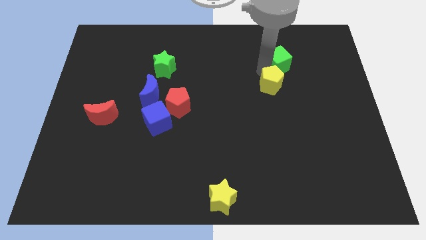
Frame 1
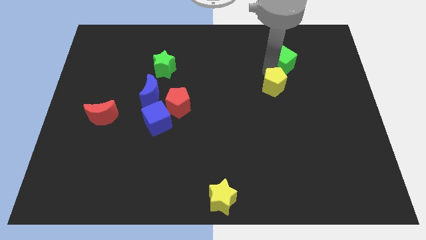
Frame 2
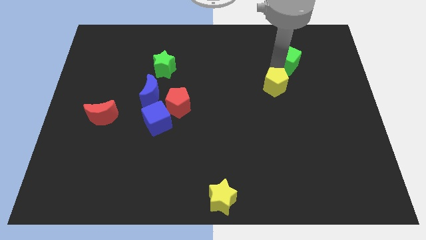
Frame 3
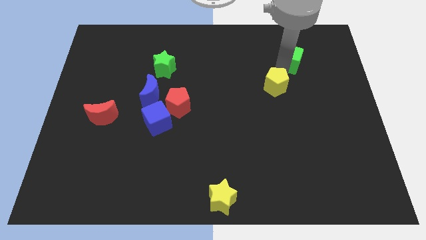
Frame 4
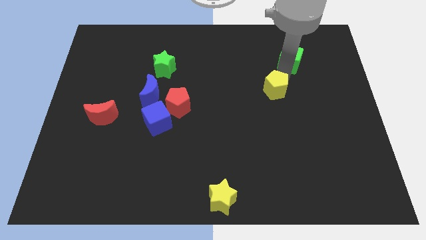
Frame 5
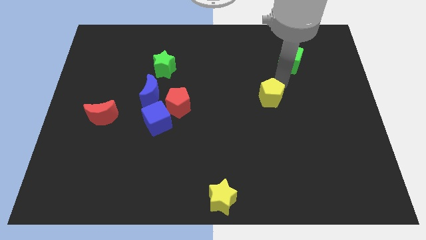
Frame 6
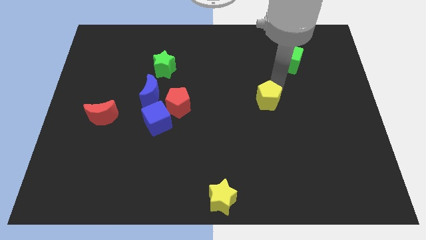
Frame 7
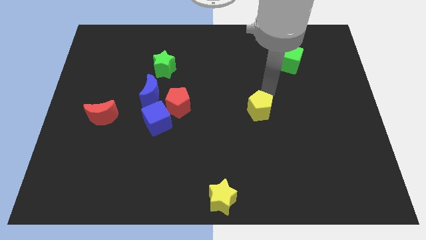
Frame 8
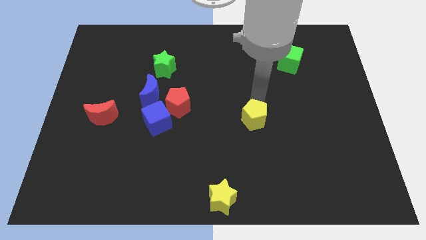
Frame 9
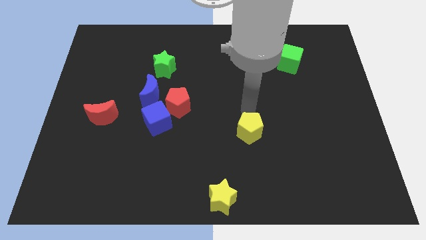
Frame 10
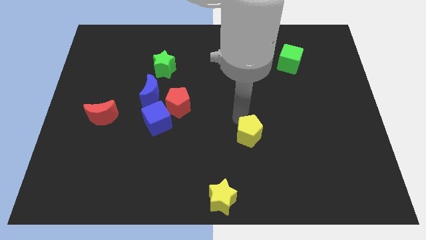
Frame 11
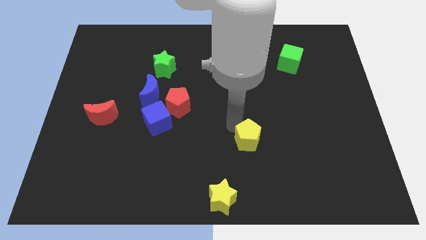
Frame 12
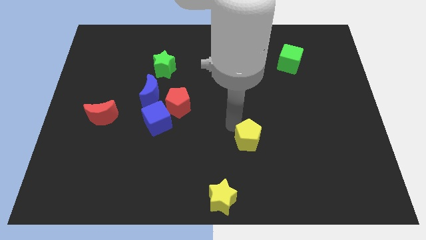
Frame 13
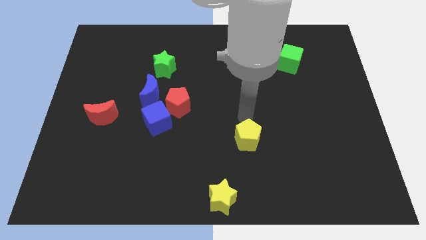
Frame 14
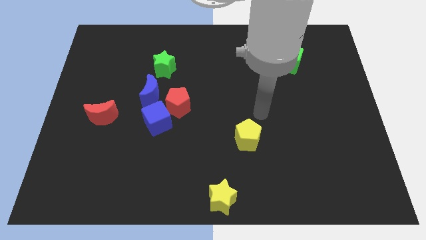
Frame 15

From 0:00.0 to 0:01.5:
separate the yellow pentagon from the green cube

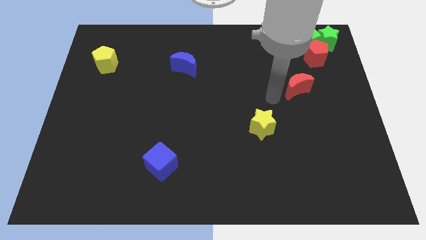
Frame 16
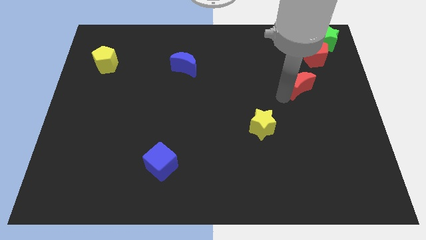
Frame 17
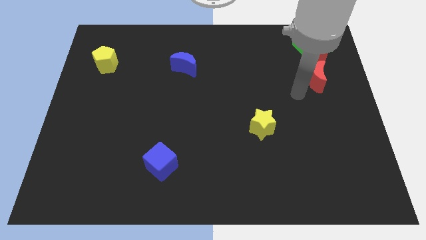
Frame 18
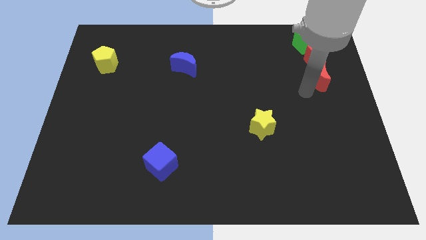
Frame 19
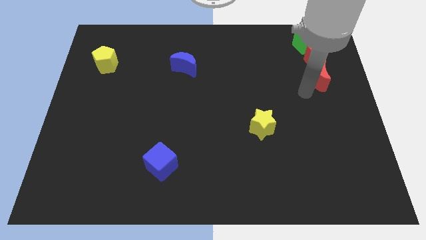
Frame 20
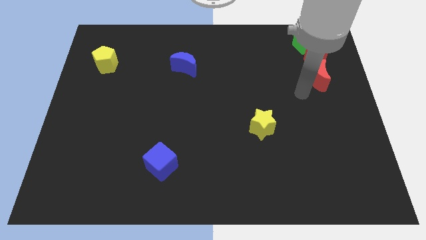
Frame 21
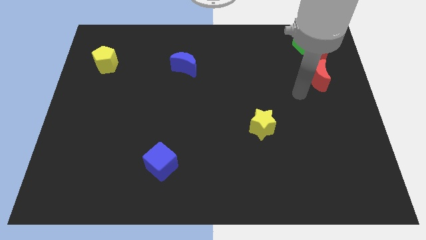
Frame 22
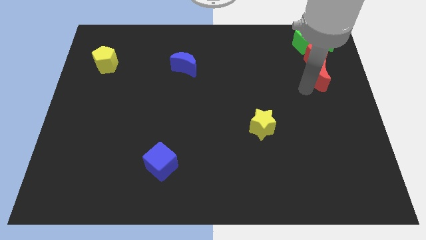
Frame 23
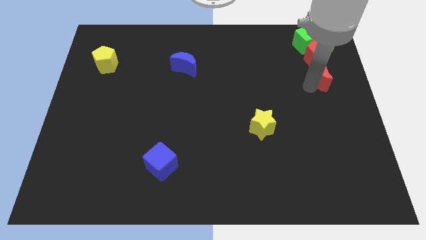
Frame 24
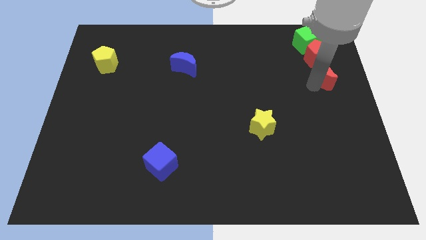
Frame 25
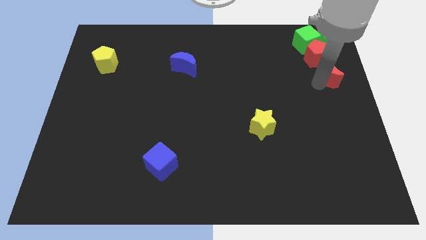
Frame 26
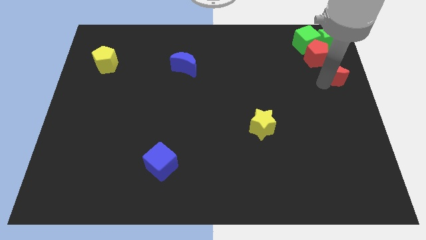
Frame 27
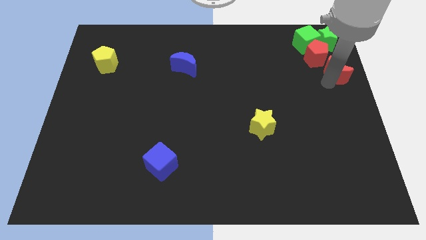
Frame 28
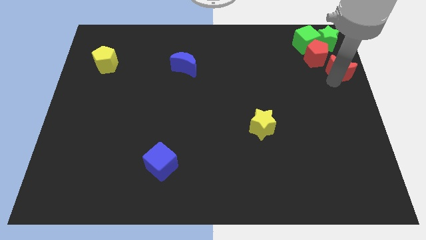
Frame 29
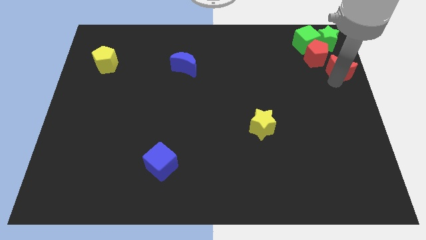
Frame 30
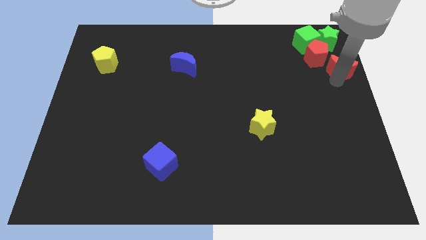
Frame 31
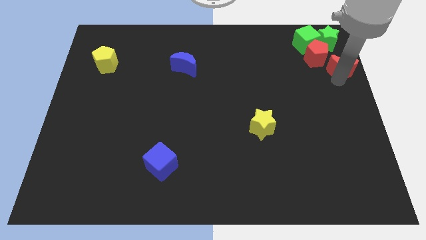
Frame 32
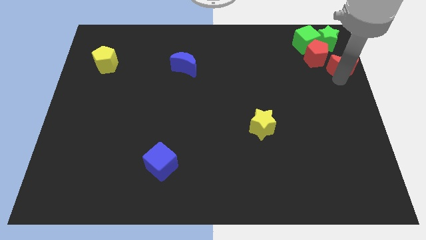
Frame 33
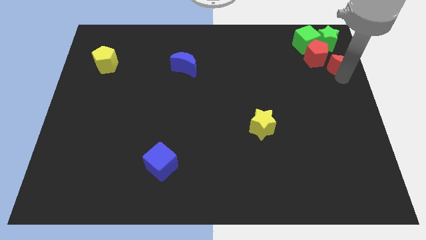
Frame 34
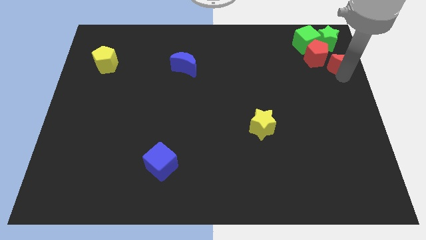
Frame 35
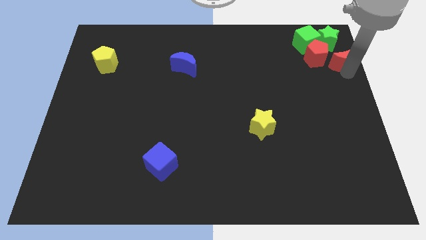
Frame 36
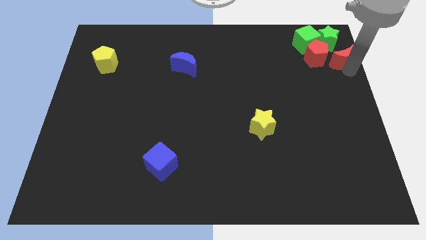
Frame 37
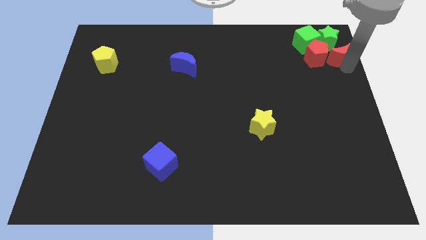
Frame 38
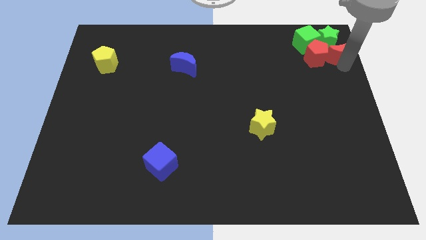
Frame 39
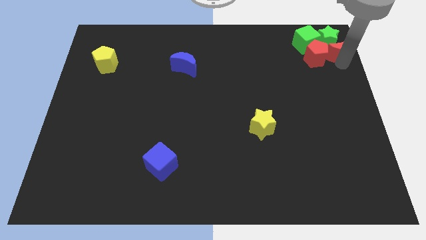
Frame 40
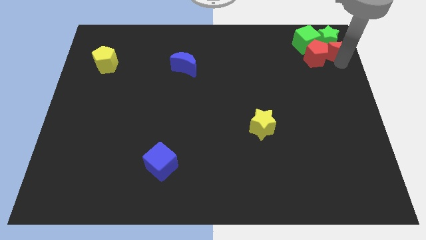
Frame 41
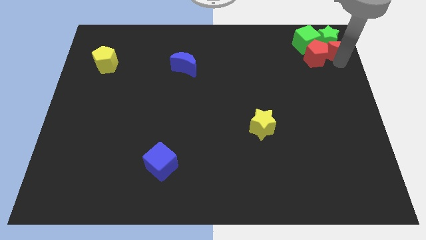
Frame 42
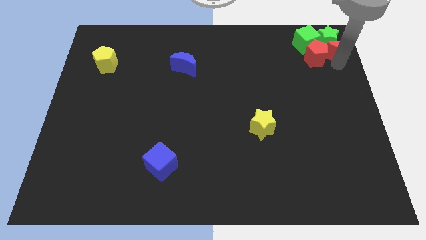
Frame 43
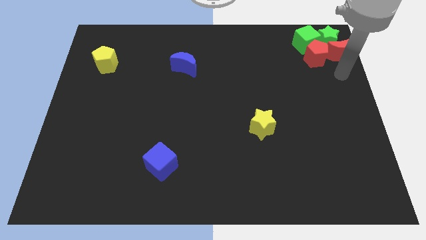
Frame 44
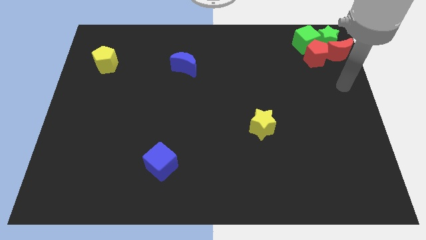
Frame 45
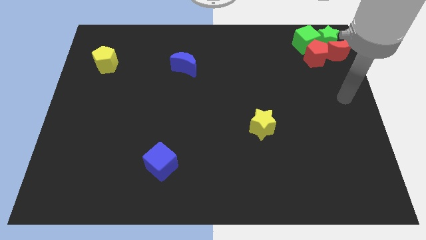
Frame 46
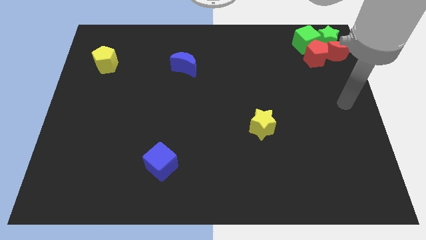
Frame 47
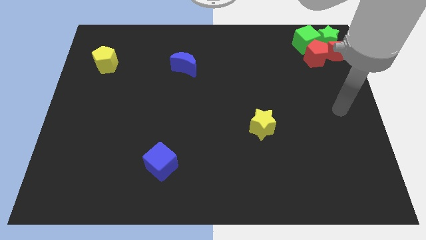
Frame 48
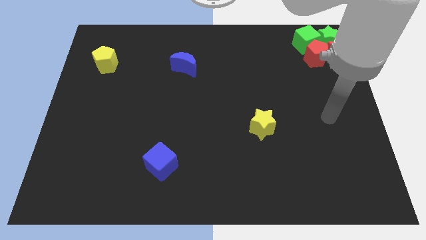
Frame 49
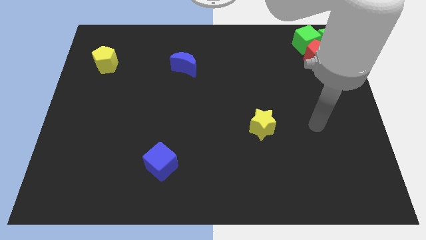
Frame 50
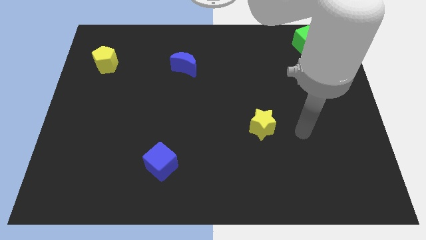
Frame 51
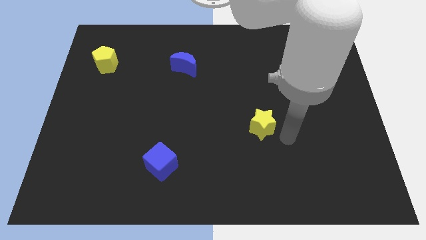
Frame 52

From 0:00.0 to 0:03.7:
move the red moon to the right of red pentagon

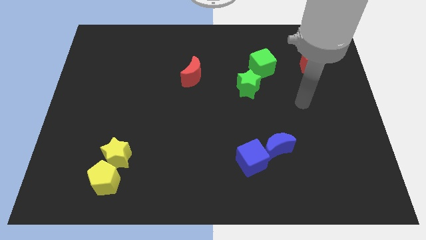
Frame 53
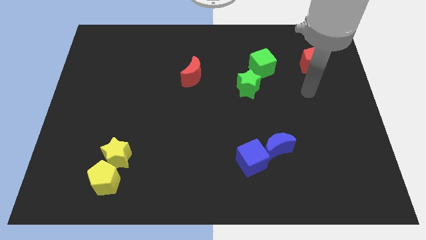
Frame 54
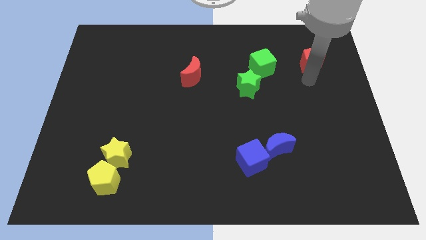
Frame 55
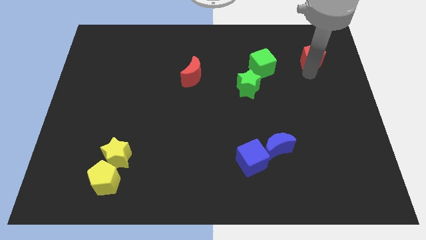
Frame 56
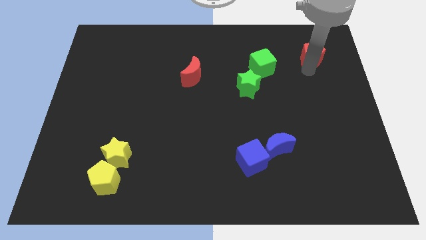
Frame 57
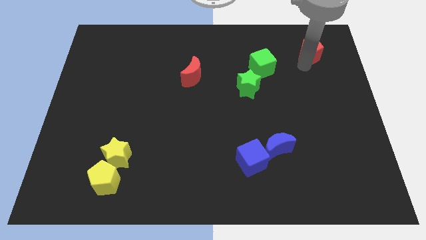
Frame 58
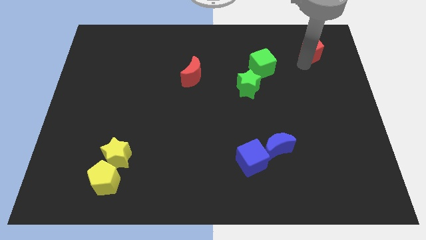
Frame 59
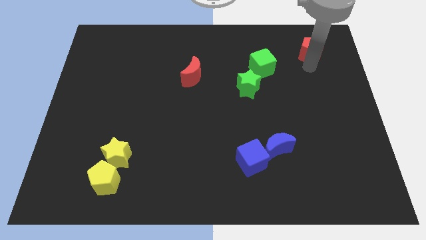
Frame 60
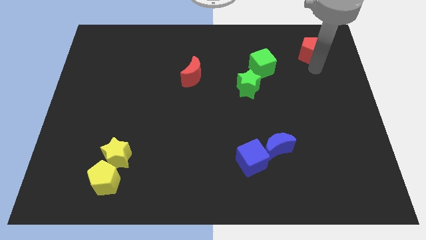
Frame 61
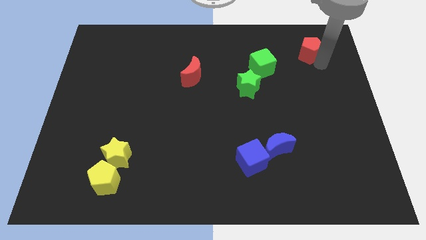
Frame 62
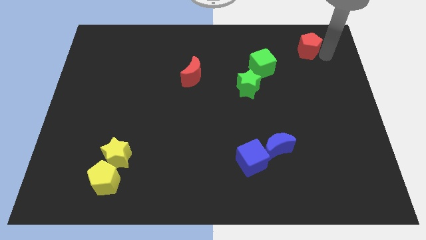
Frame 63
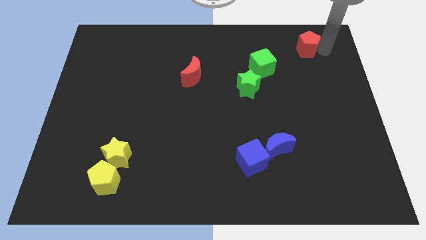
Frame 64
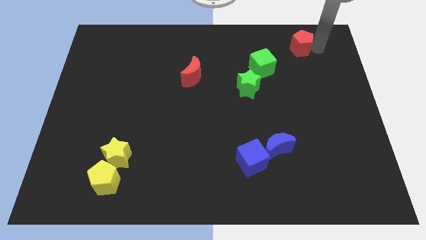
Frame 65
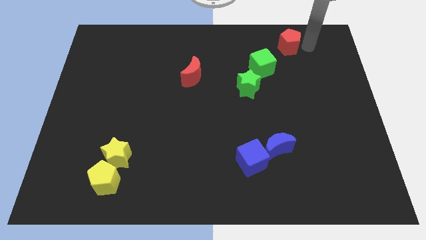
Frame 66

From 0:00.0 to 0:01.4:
push the red pentagon slightly upwards

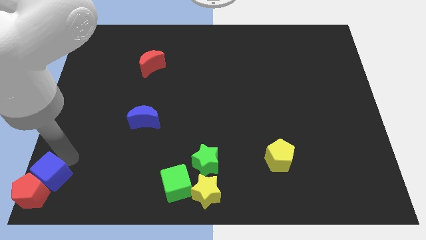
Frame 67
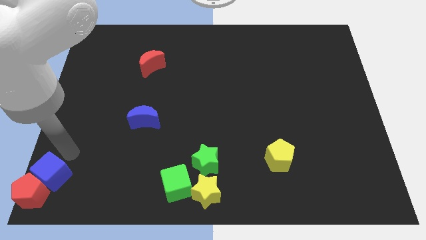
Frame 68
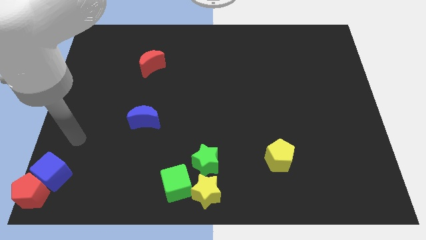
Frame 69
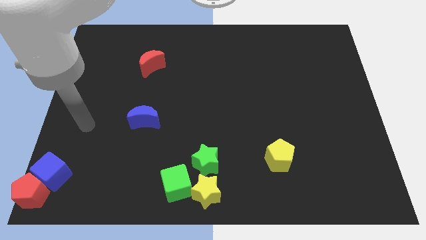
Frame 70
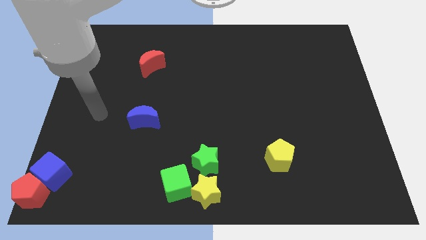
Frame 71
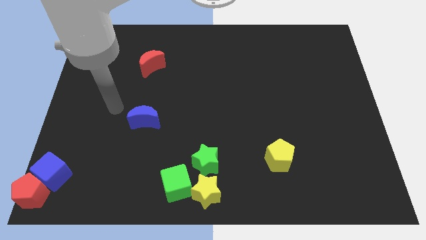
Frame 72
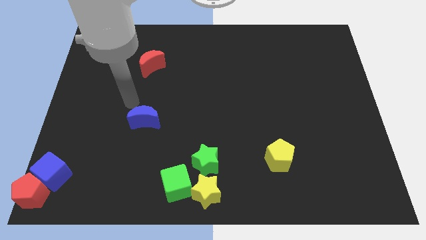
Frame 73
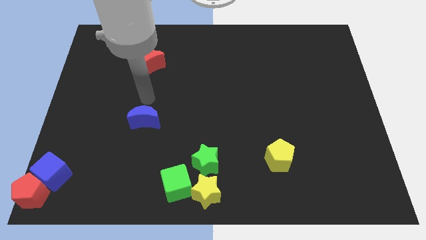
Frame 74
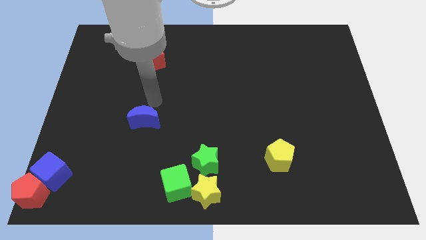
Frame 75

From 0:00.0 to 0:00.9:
move arm near blue

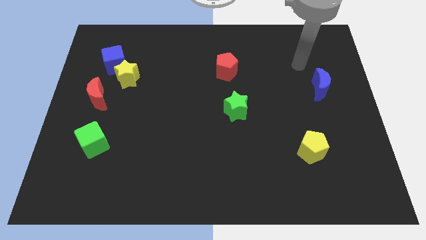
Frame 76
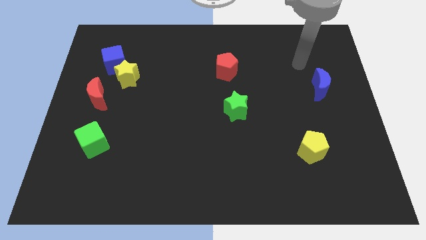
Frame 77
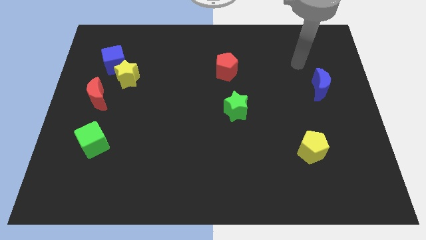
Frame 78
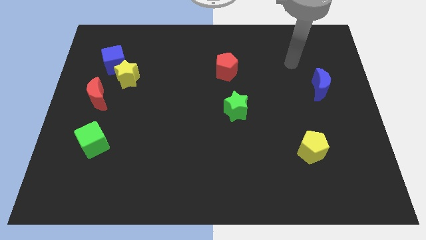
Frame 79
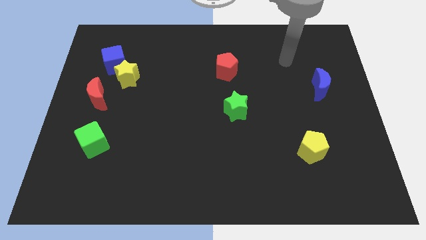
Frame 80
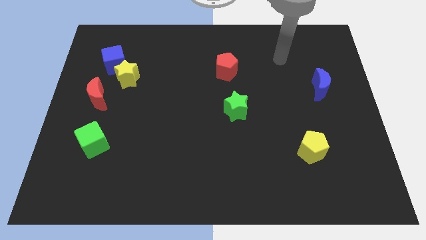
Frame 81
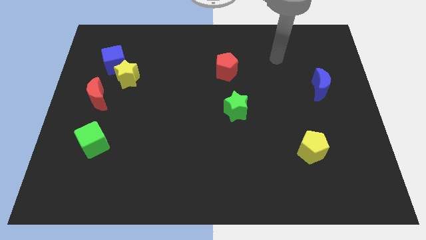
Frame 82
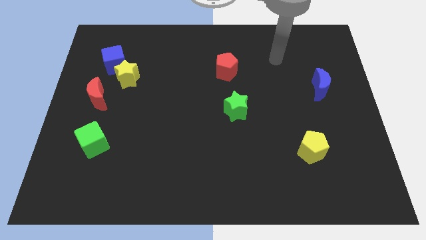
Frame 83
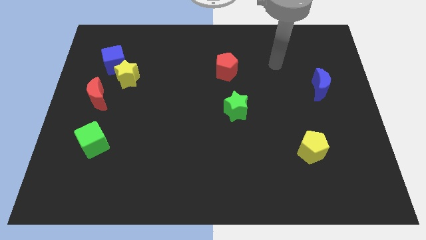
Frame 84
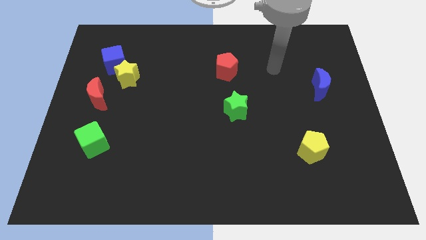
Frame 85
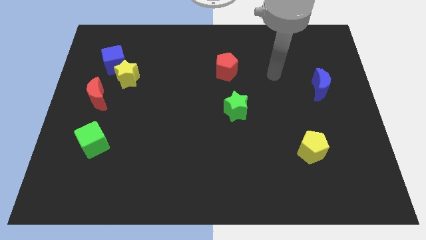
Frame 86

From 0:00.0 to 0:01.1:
place your arm in between the red pentagon and blue moon

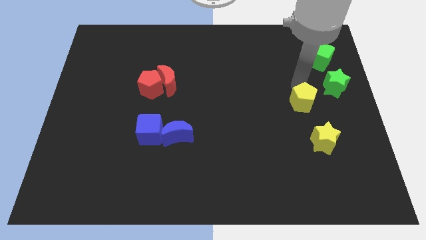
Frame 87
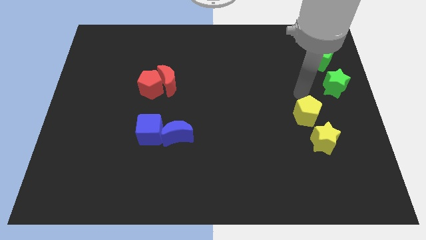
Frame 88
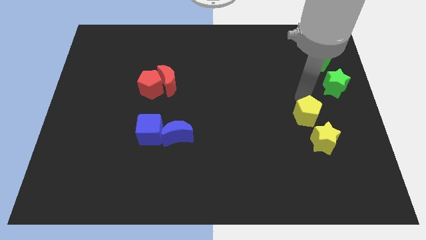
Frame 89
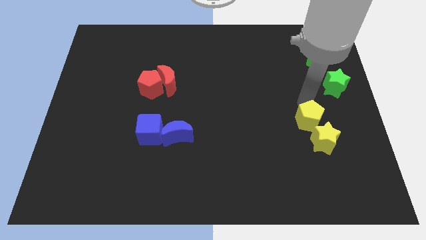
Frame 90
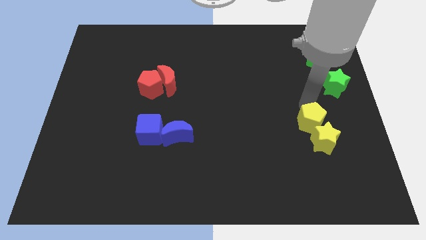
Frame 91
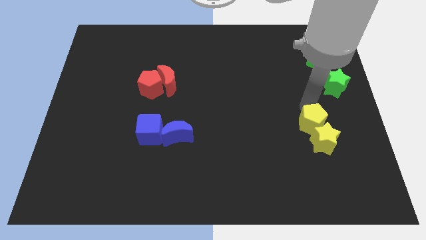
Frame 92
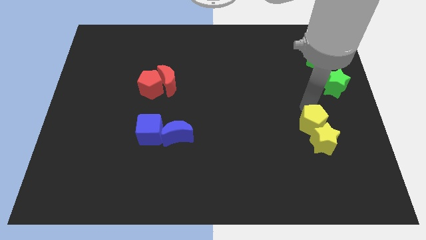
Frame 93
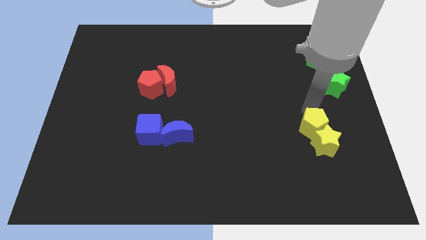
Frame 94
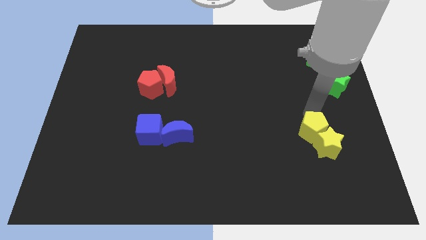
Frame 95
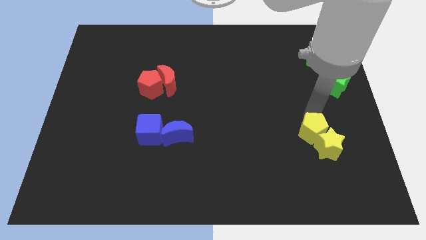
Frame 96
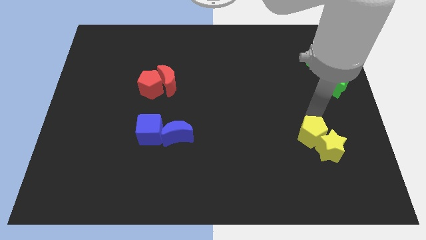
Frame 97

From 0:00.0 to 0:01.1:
move the yellow pentagon into the yellow star
